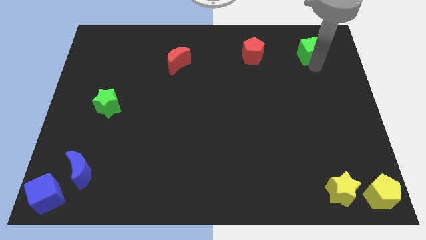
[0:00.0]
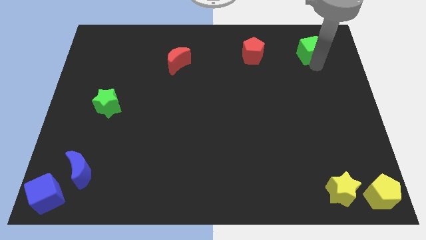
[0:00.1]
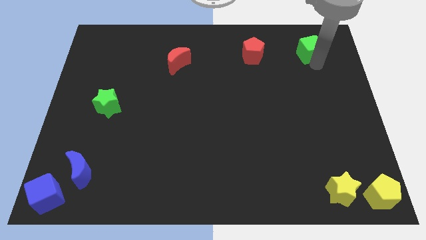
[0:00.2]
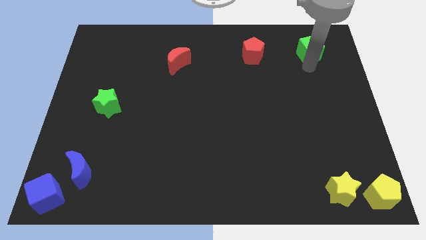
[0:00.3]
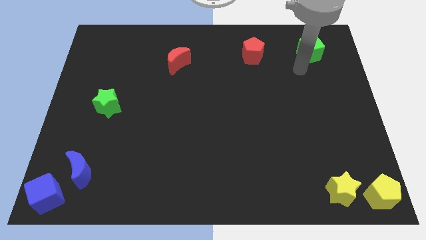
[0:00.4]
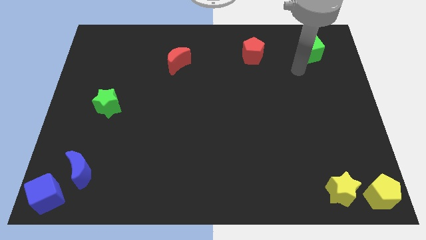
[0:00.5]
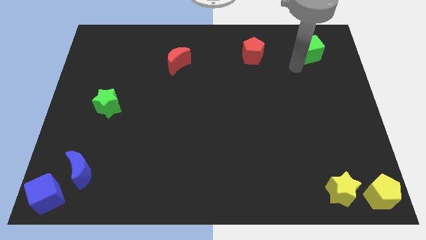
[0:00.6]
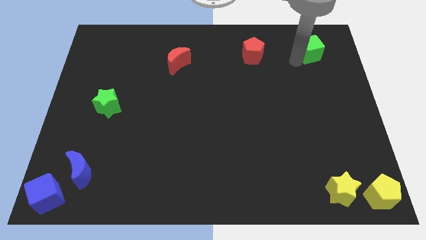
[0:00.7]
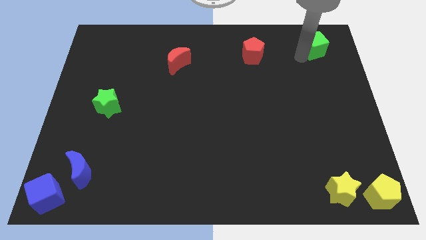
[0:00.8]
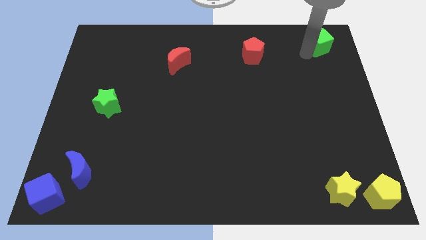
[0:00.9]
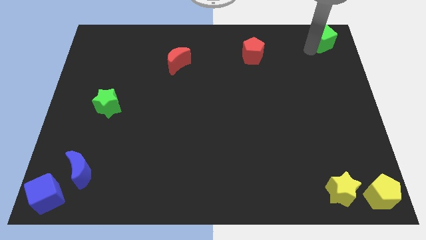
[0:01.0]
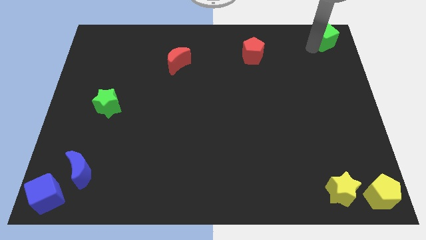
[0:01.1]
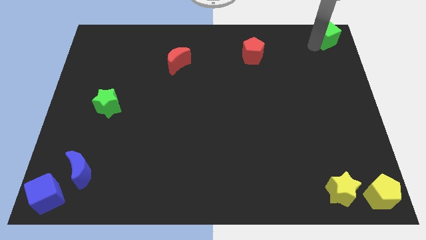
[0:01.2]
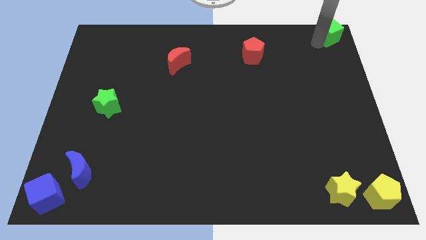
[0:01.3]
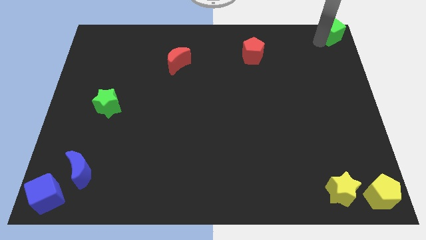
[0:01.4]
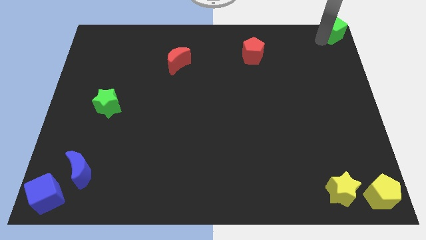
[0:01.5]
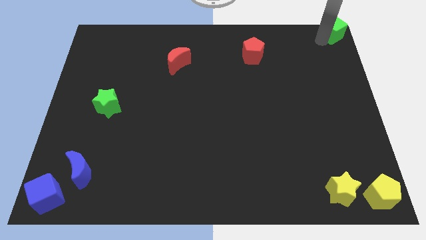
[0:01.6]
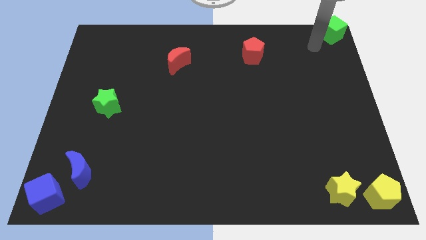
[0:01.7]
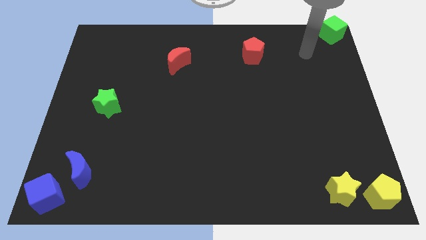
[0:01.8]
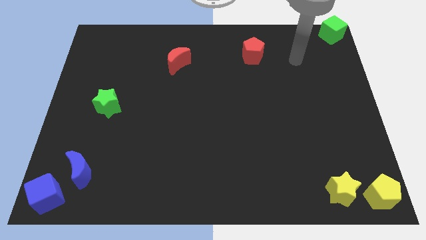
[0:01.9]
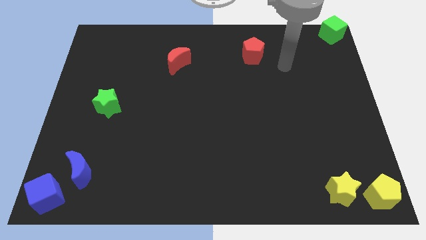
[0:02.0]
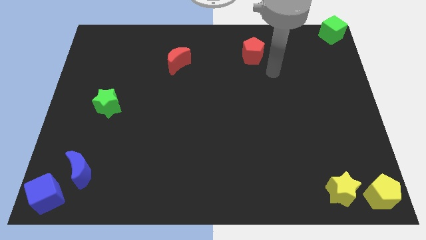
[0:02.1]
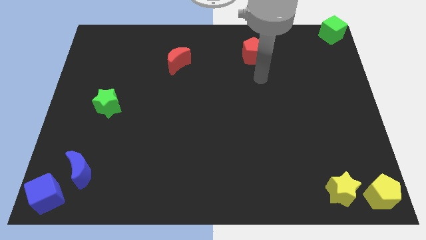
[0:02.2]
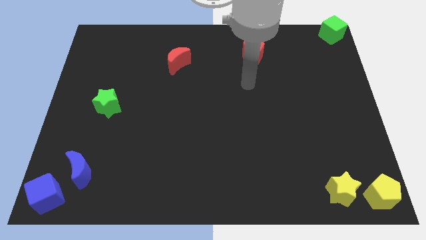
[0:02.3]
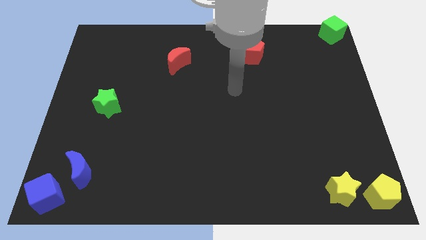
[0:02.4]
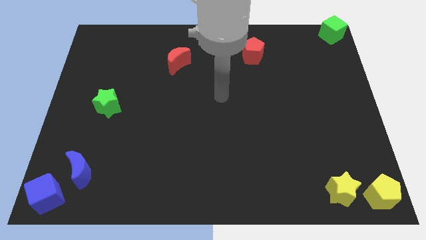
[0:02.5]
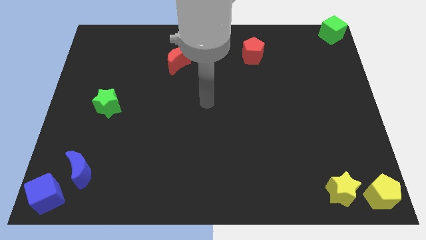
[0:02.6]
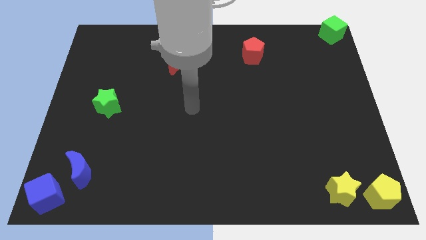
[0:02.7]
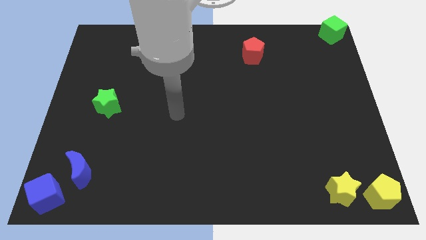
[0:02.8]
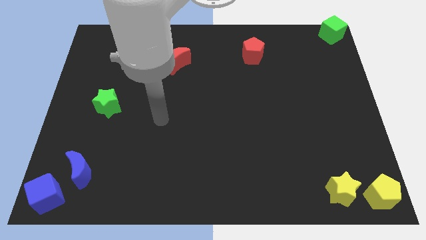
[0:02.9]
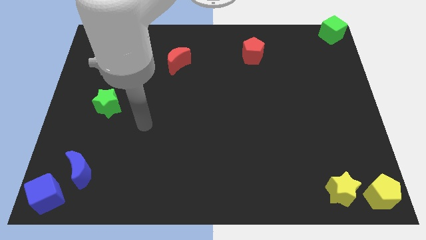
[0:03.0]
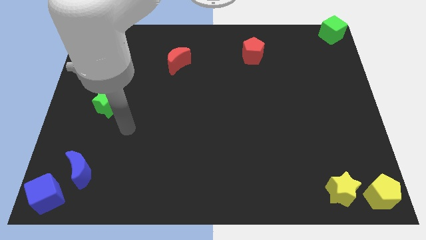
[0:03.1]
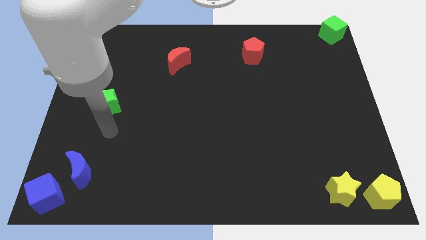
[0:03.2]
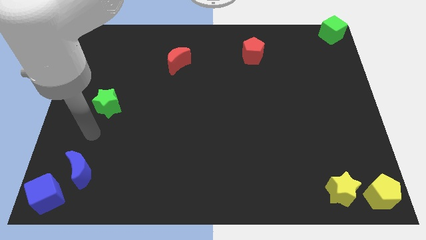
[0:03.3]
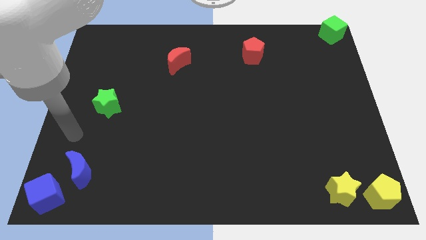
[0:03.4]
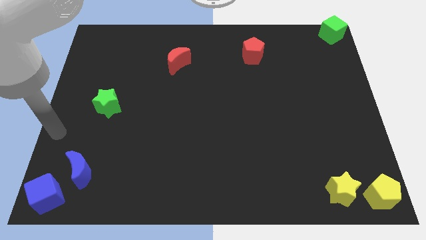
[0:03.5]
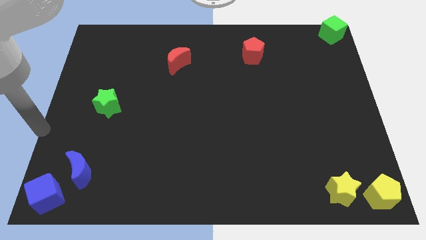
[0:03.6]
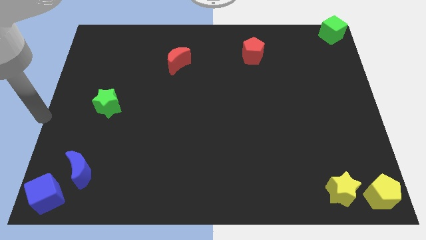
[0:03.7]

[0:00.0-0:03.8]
put the green cube at the top right corner

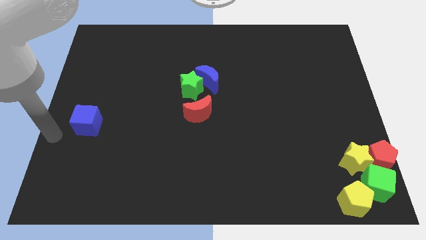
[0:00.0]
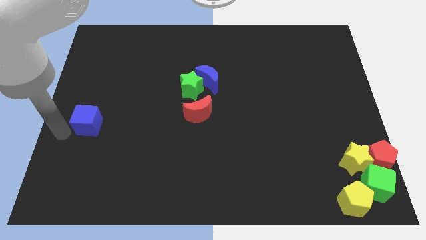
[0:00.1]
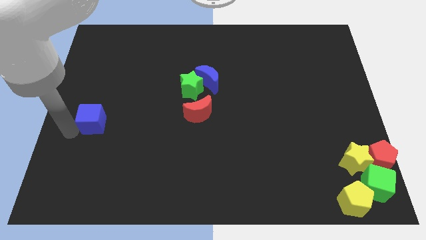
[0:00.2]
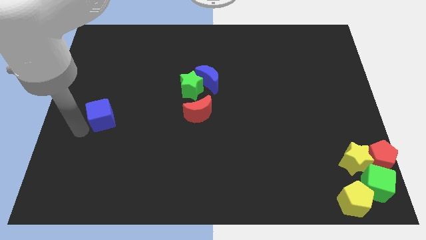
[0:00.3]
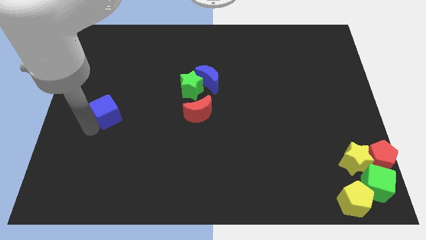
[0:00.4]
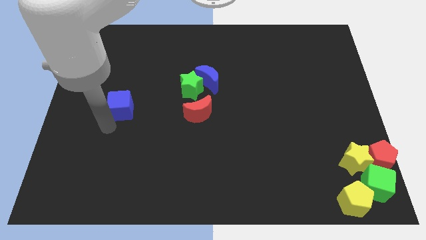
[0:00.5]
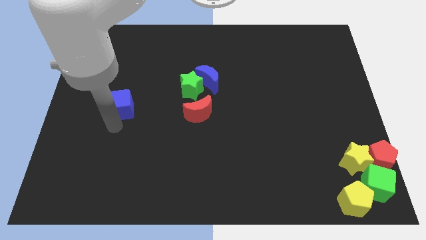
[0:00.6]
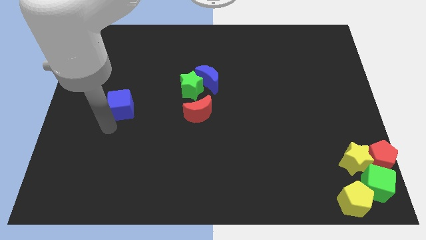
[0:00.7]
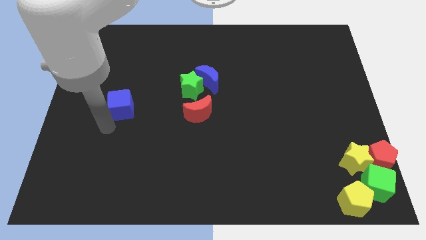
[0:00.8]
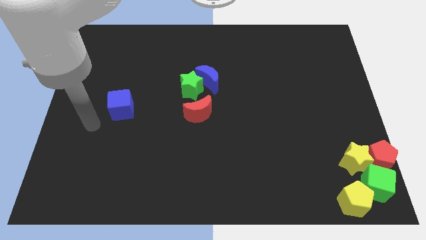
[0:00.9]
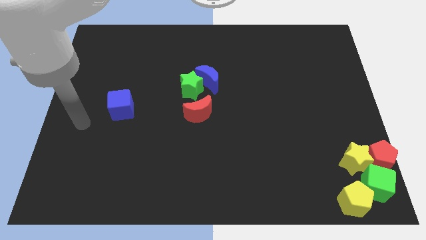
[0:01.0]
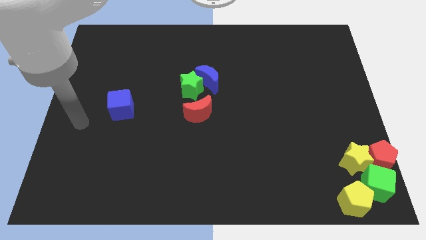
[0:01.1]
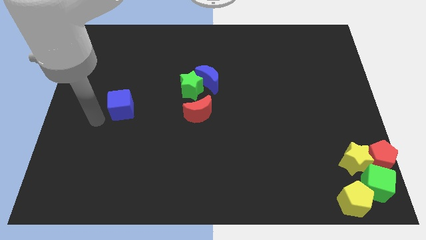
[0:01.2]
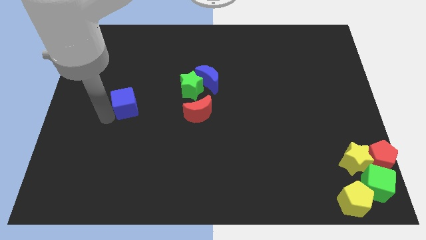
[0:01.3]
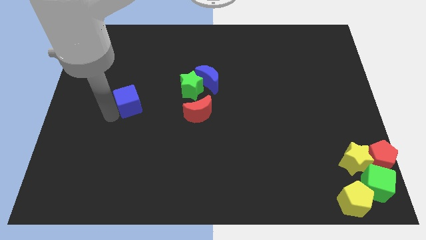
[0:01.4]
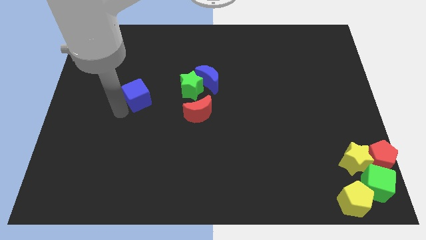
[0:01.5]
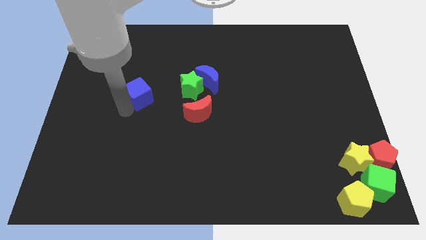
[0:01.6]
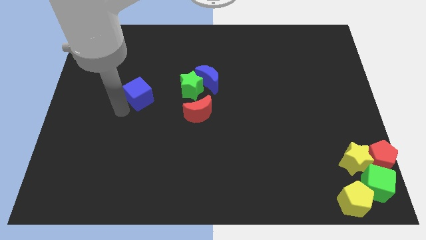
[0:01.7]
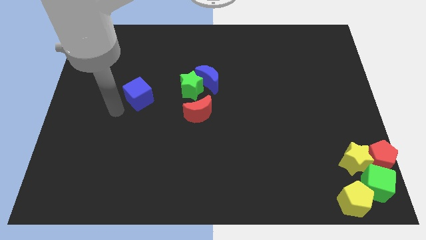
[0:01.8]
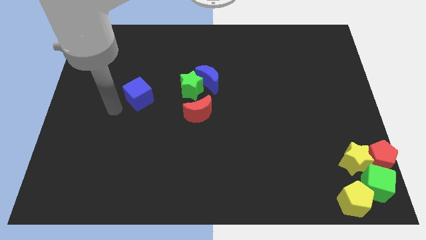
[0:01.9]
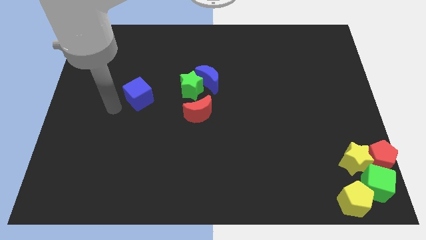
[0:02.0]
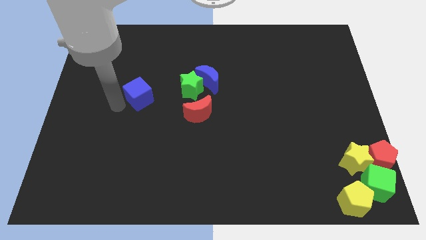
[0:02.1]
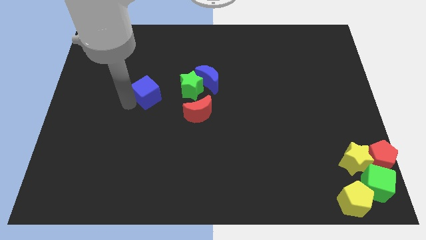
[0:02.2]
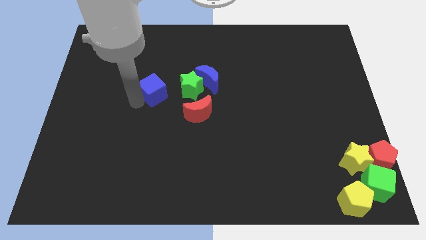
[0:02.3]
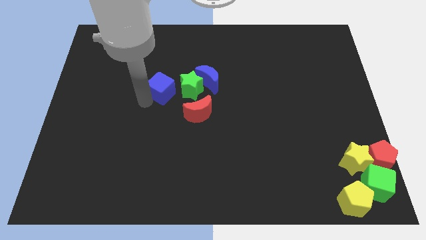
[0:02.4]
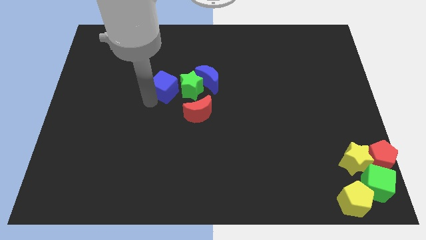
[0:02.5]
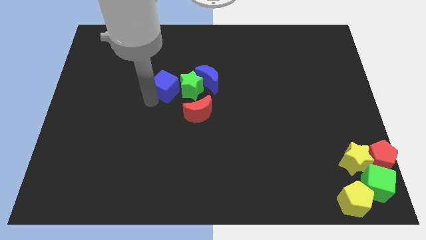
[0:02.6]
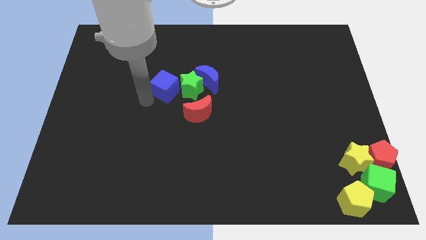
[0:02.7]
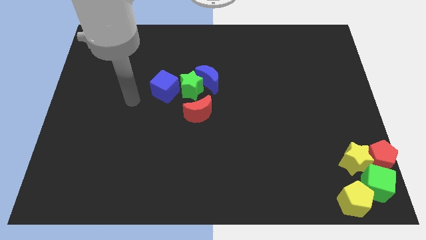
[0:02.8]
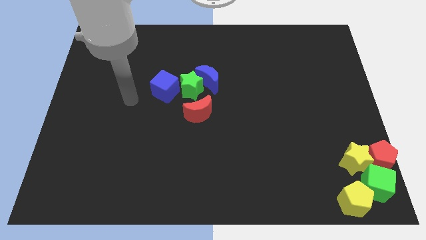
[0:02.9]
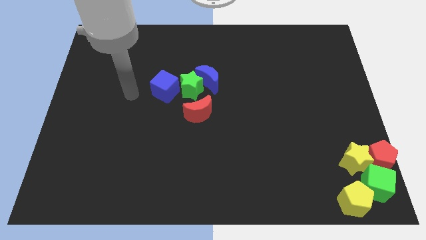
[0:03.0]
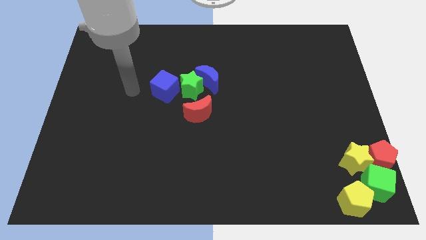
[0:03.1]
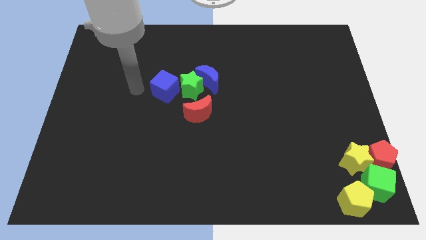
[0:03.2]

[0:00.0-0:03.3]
move the blue cube close to the green star

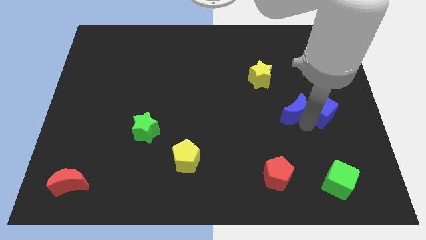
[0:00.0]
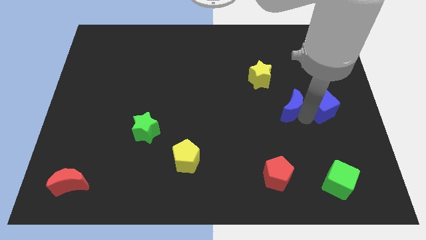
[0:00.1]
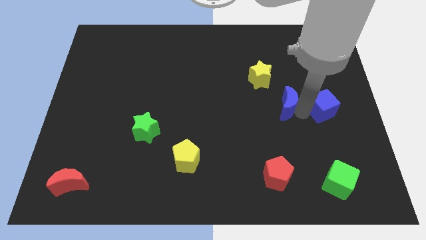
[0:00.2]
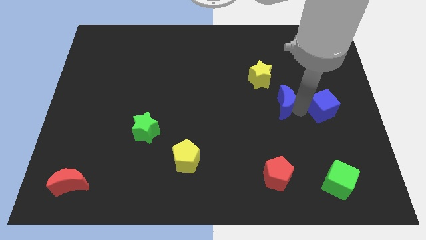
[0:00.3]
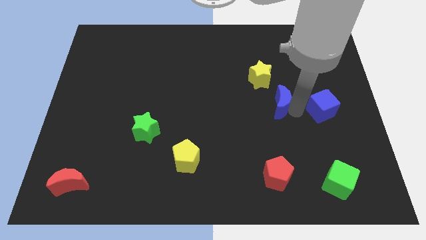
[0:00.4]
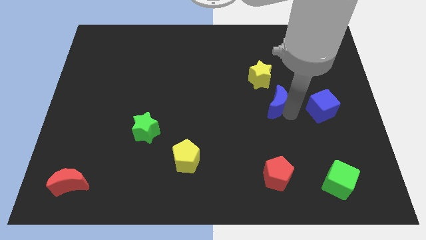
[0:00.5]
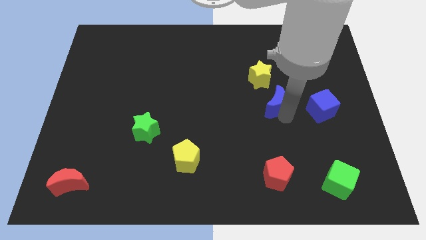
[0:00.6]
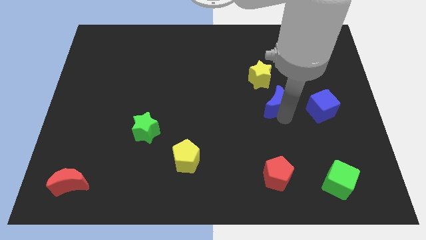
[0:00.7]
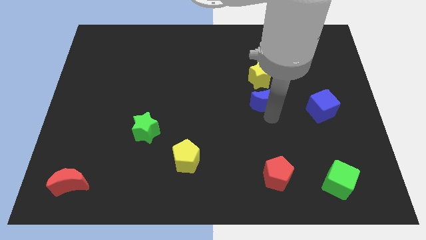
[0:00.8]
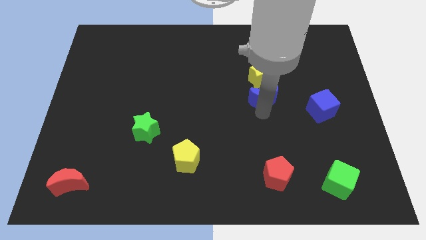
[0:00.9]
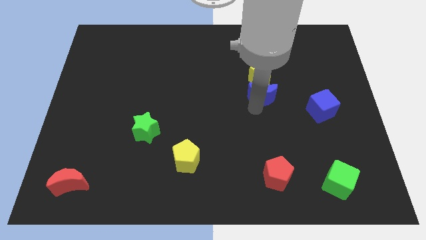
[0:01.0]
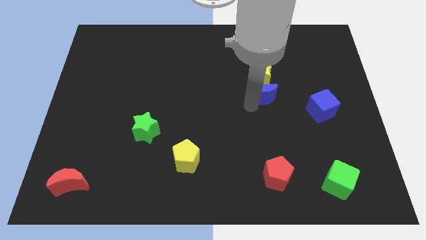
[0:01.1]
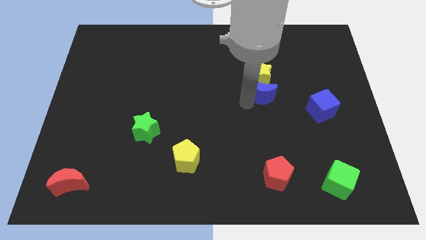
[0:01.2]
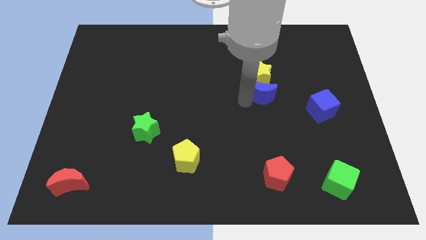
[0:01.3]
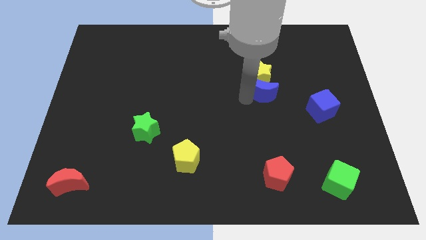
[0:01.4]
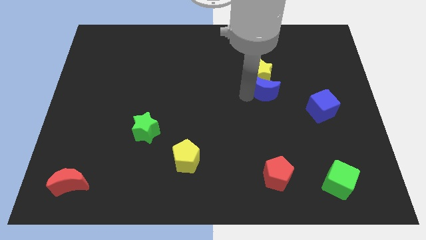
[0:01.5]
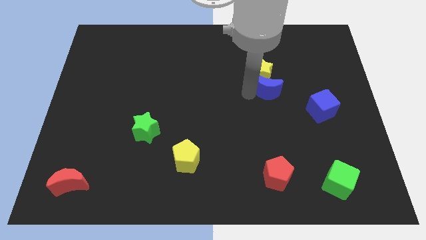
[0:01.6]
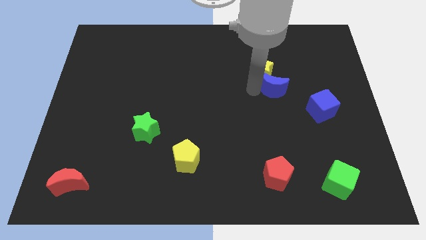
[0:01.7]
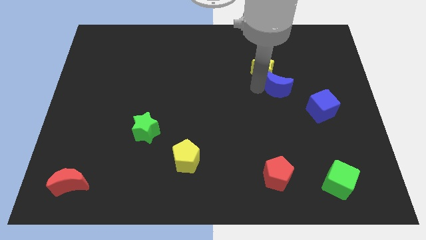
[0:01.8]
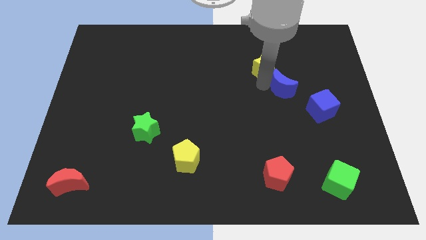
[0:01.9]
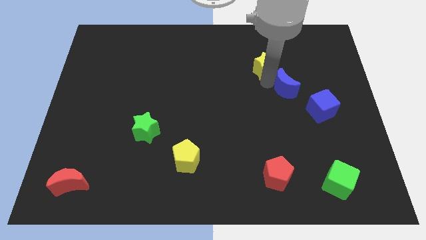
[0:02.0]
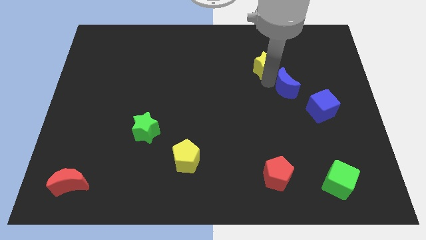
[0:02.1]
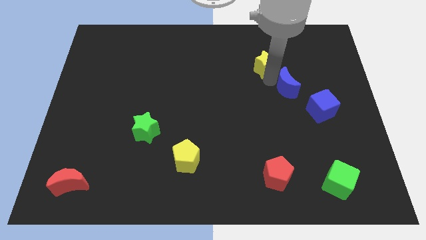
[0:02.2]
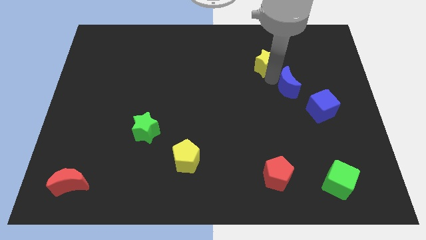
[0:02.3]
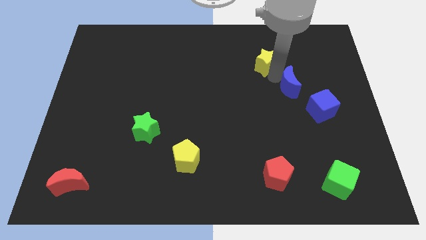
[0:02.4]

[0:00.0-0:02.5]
push the blue crescent to the bottom right of the yellow star
